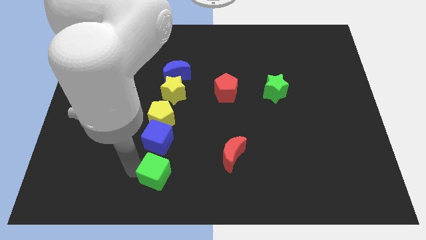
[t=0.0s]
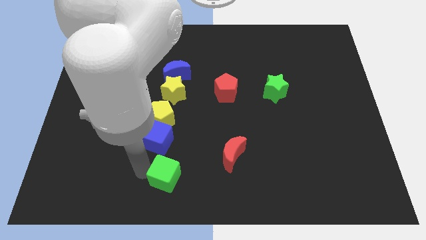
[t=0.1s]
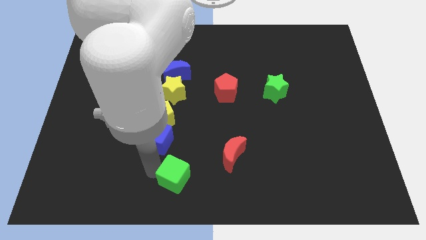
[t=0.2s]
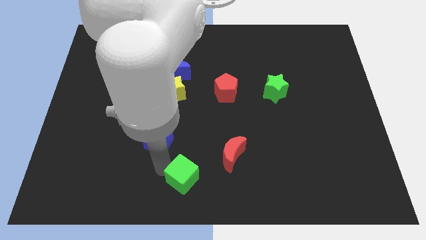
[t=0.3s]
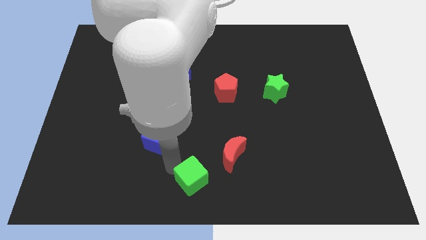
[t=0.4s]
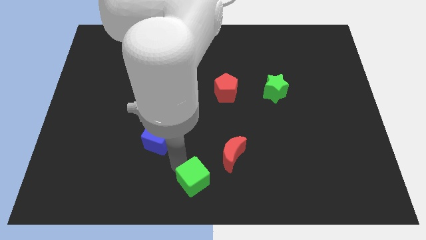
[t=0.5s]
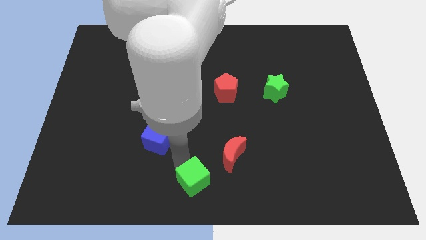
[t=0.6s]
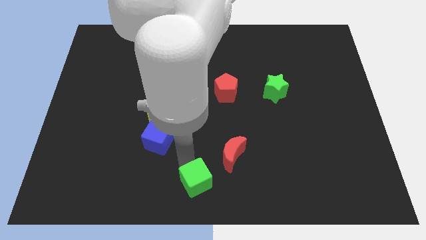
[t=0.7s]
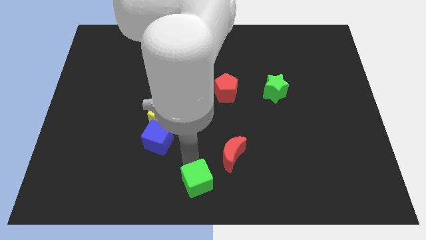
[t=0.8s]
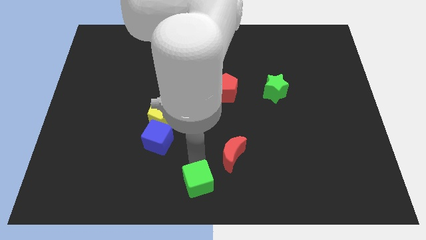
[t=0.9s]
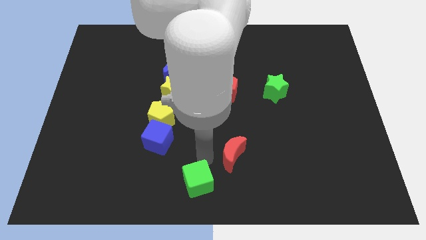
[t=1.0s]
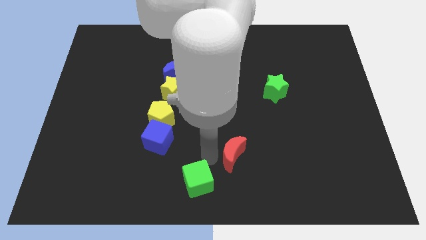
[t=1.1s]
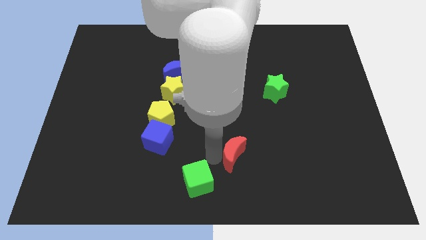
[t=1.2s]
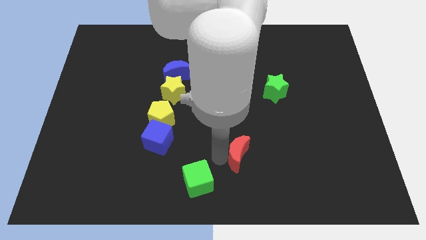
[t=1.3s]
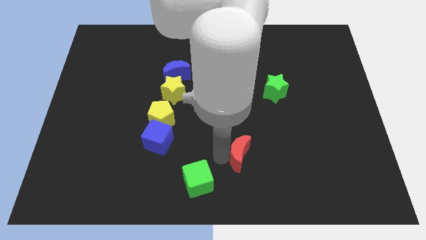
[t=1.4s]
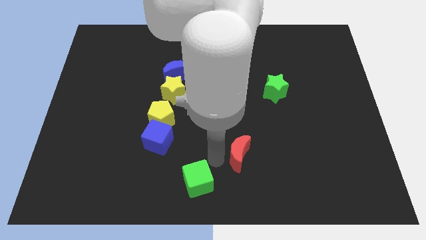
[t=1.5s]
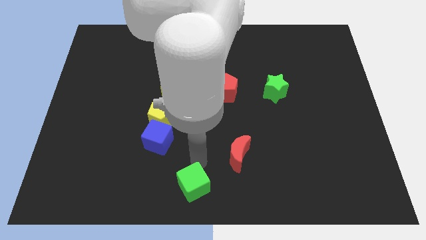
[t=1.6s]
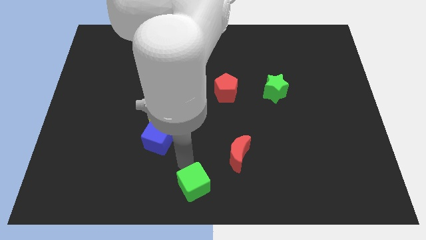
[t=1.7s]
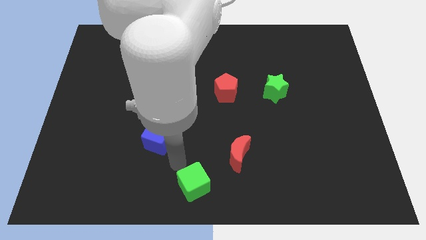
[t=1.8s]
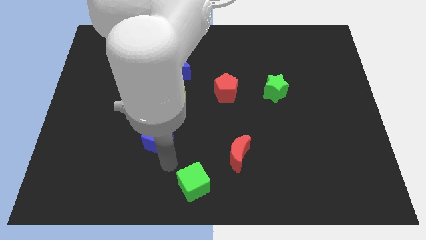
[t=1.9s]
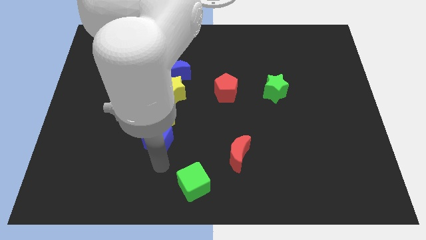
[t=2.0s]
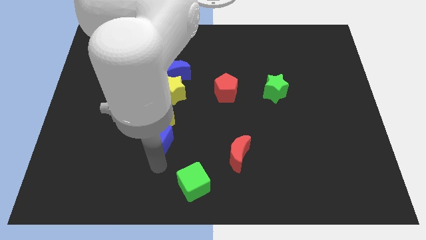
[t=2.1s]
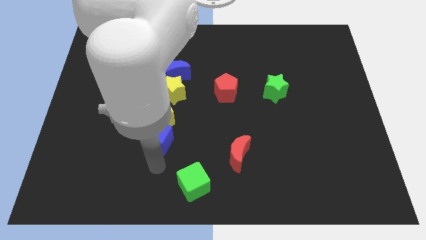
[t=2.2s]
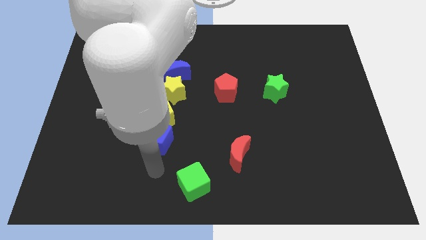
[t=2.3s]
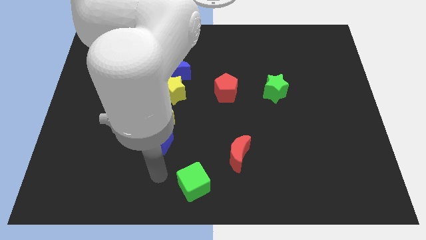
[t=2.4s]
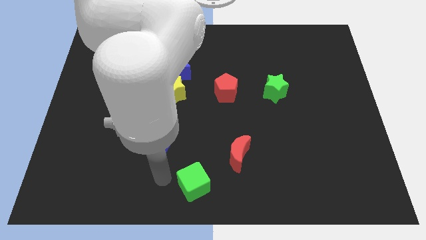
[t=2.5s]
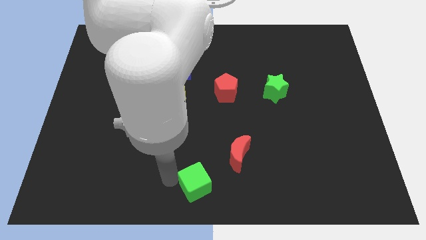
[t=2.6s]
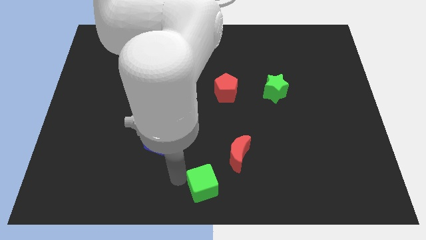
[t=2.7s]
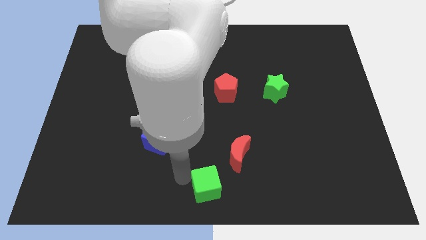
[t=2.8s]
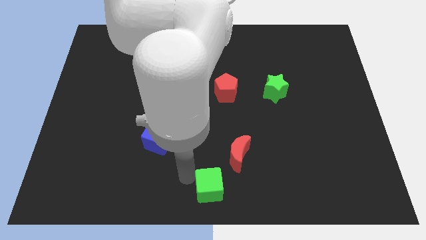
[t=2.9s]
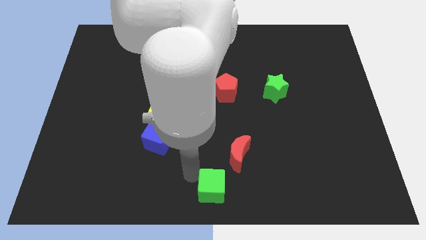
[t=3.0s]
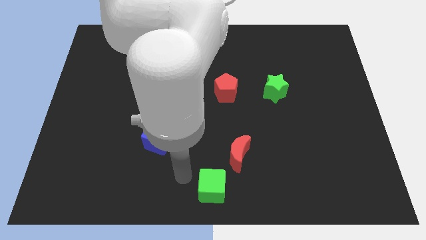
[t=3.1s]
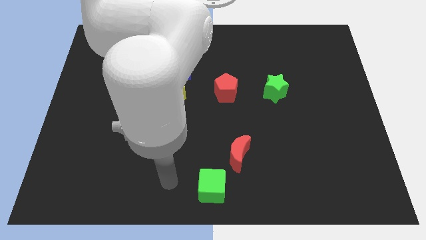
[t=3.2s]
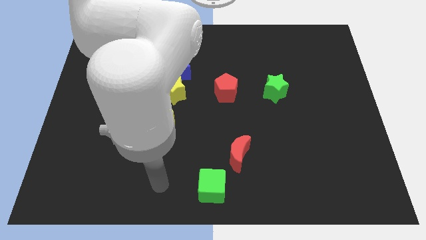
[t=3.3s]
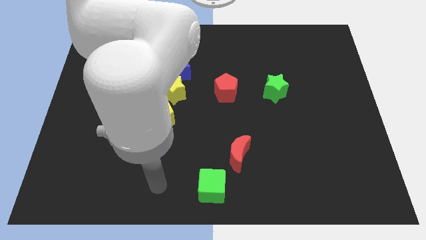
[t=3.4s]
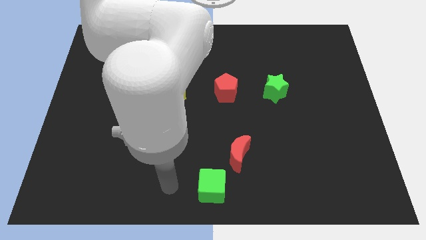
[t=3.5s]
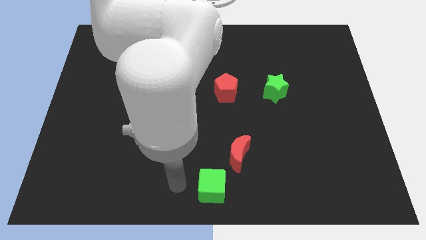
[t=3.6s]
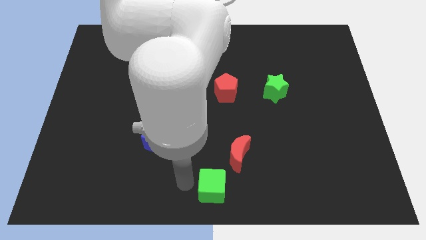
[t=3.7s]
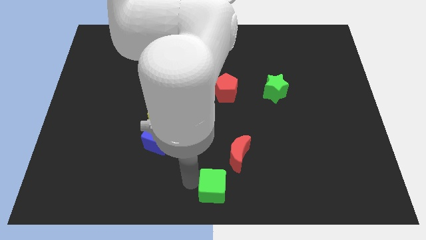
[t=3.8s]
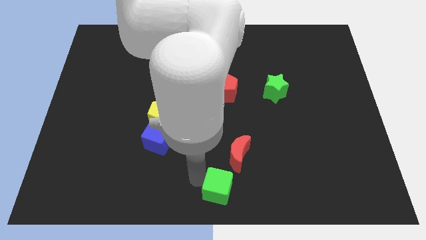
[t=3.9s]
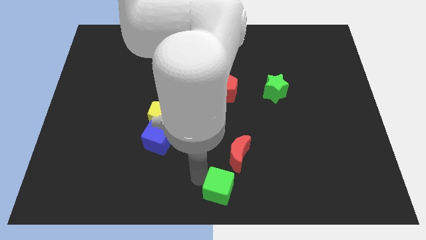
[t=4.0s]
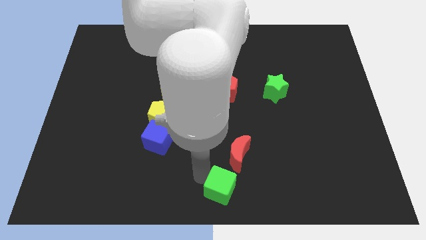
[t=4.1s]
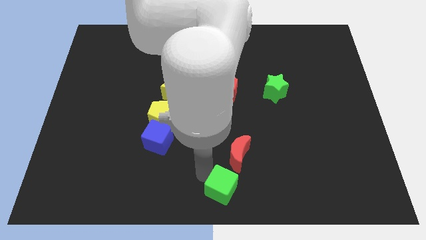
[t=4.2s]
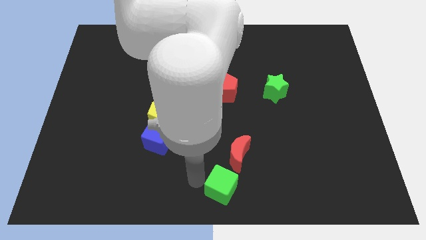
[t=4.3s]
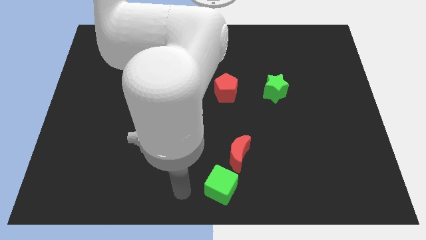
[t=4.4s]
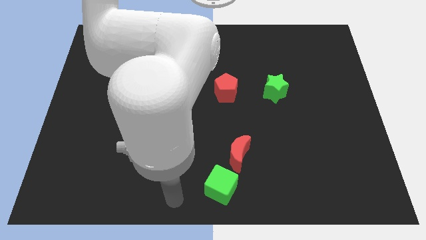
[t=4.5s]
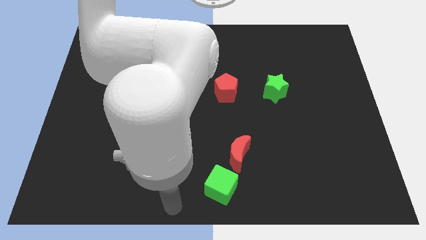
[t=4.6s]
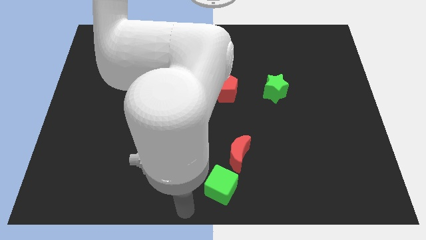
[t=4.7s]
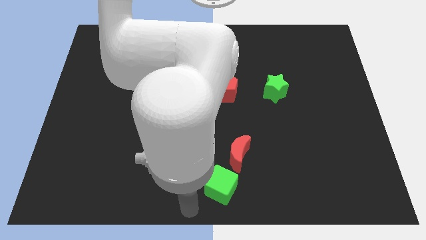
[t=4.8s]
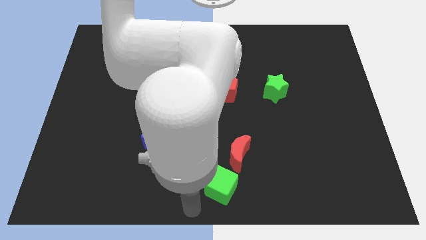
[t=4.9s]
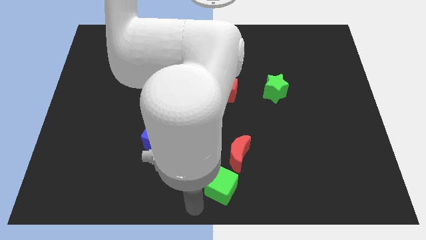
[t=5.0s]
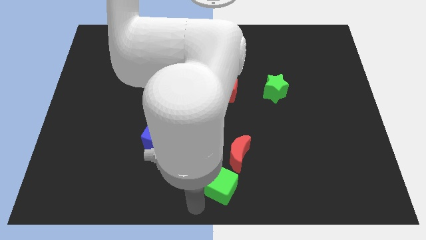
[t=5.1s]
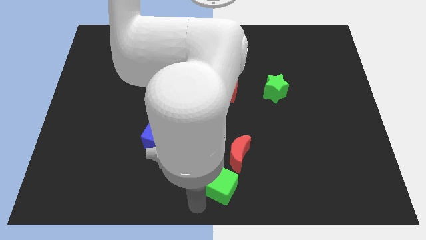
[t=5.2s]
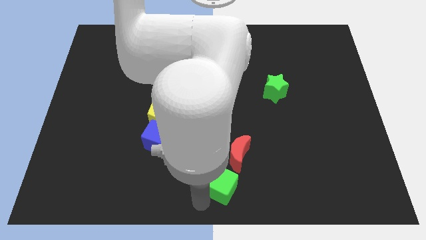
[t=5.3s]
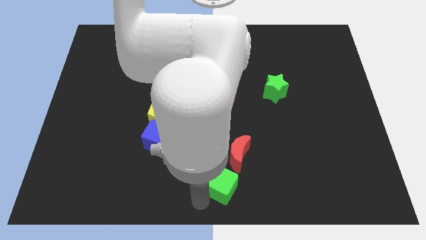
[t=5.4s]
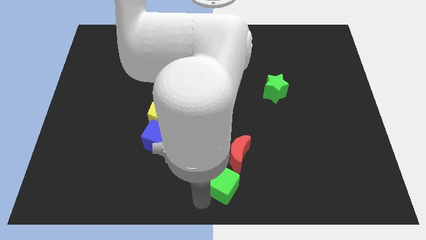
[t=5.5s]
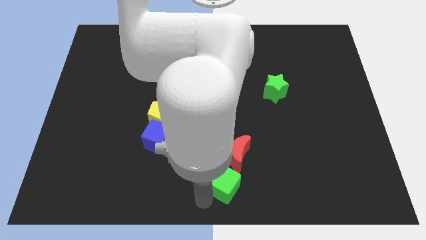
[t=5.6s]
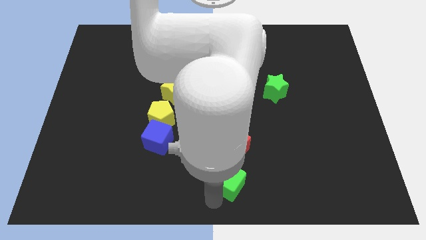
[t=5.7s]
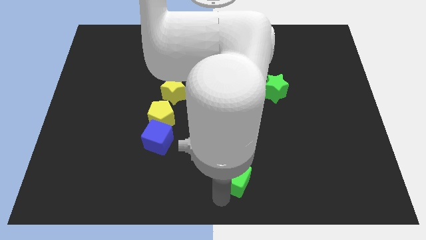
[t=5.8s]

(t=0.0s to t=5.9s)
move green cube to the bottom of red crescent

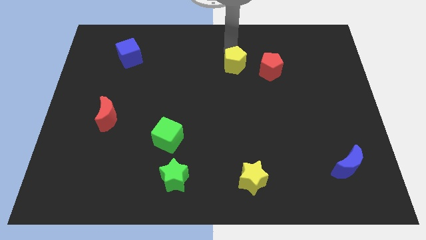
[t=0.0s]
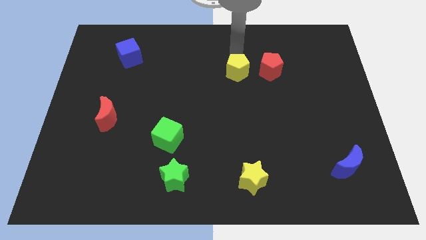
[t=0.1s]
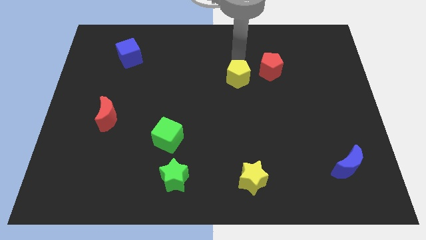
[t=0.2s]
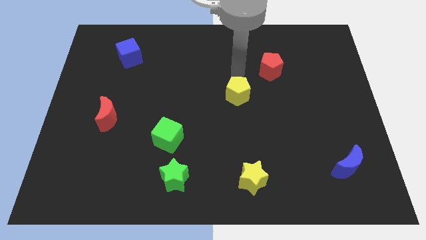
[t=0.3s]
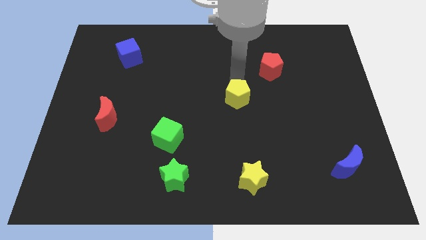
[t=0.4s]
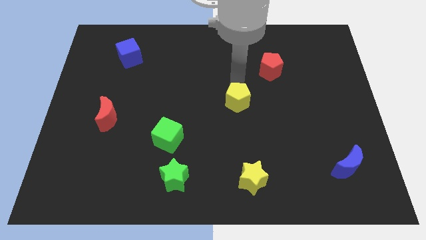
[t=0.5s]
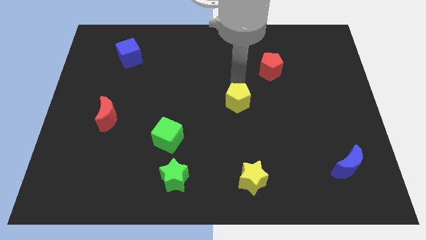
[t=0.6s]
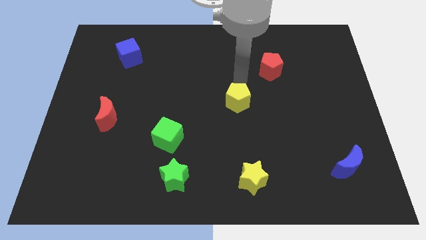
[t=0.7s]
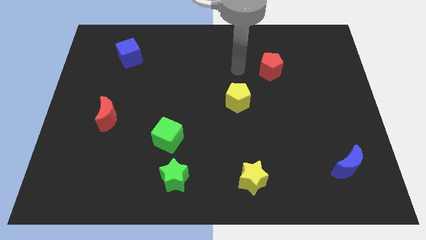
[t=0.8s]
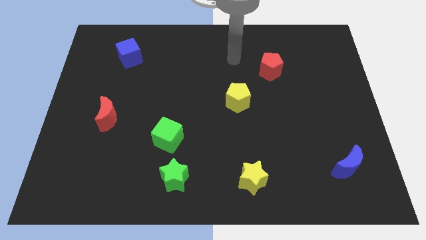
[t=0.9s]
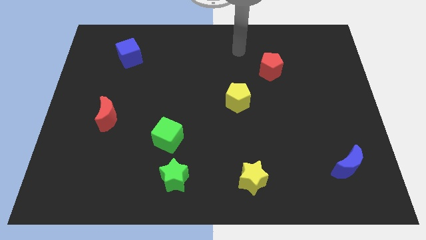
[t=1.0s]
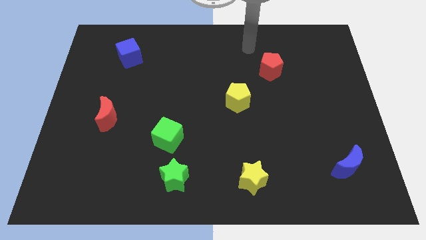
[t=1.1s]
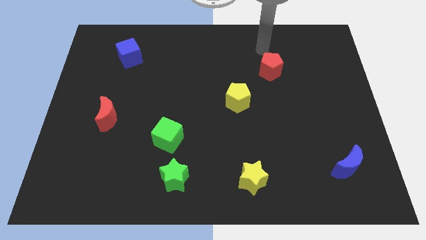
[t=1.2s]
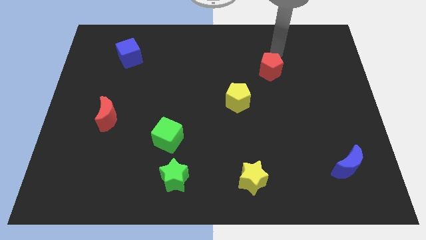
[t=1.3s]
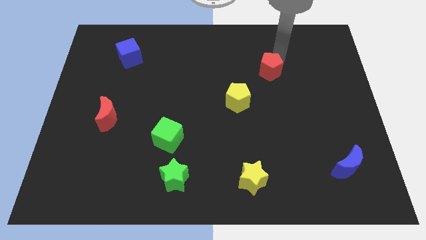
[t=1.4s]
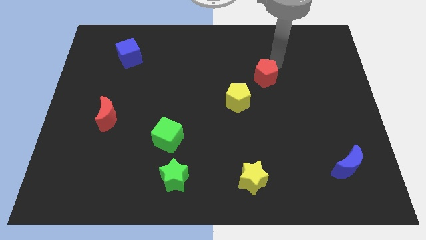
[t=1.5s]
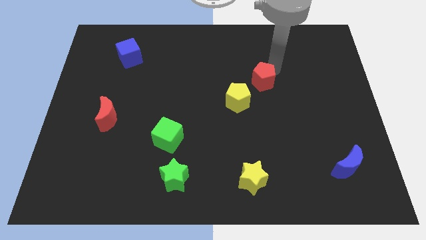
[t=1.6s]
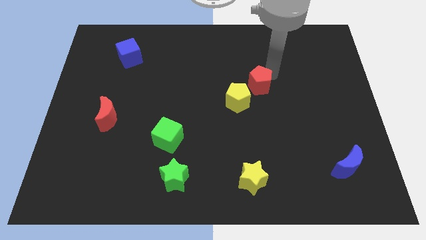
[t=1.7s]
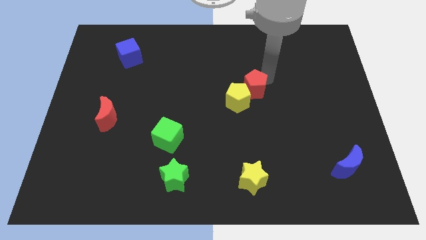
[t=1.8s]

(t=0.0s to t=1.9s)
push the yellow pentagon towards the bottom side

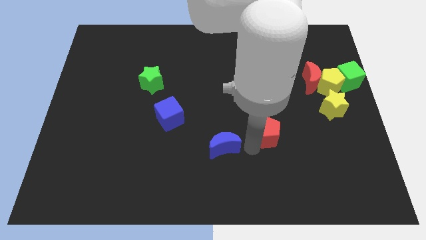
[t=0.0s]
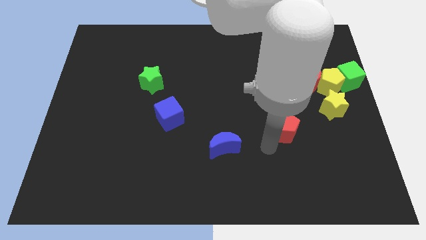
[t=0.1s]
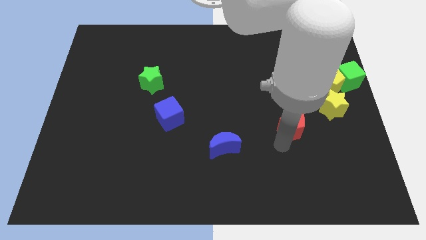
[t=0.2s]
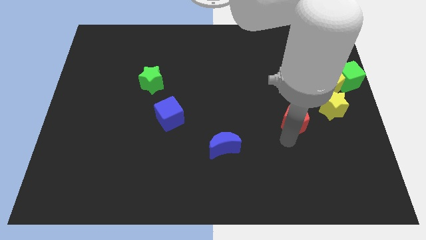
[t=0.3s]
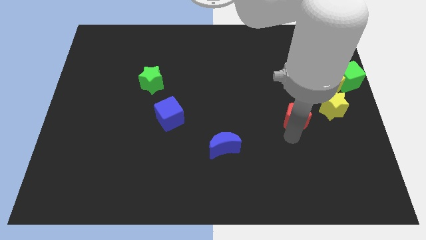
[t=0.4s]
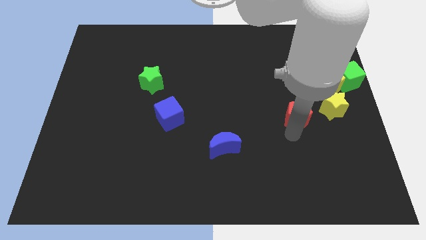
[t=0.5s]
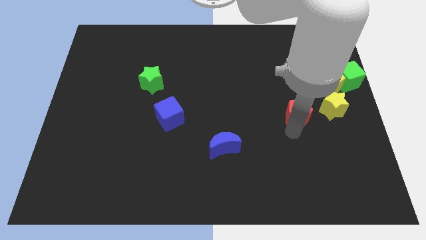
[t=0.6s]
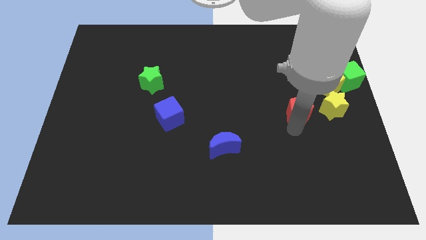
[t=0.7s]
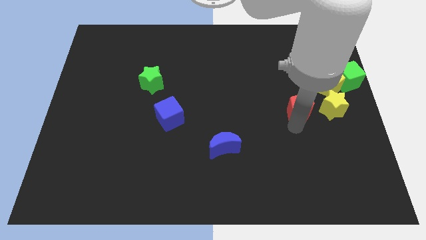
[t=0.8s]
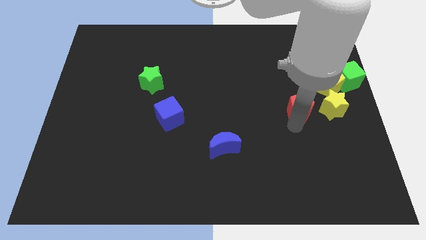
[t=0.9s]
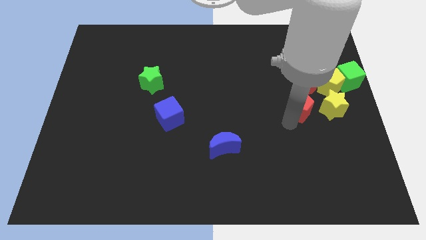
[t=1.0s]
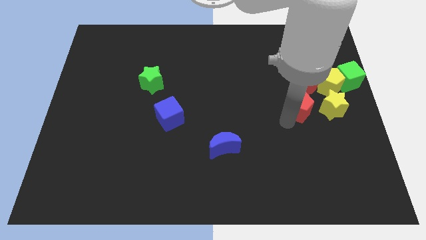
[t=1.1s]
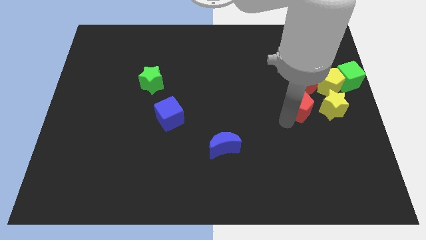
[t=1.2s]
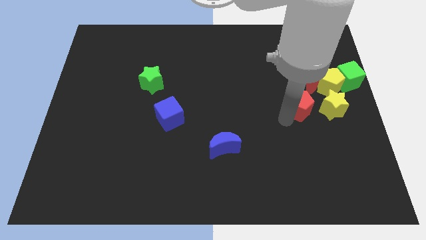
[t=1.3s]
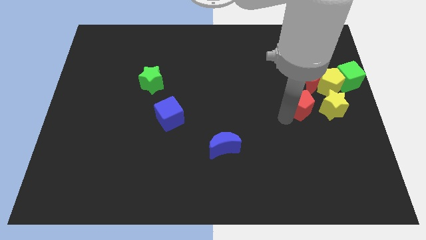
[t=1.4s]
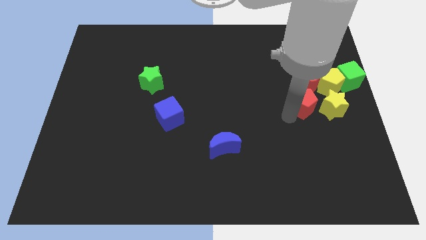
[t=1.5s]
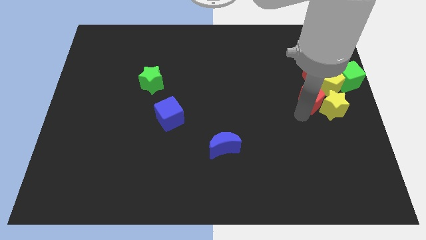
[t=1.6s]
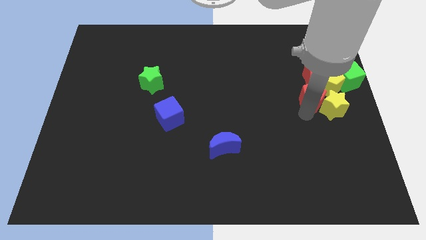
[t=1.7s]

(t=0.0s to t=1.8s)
push the red pentagon into the red crescent
